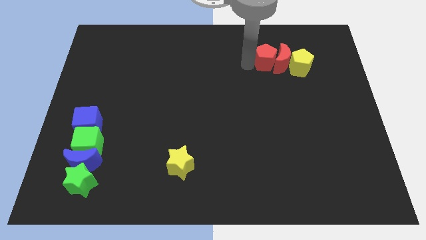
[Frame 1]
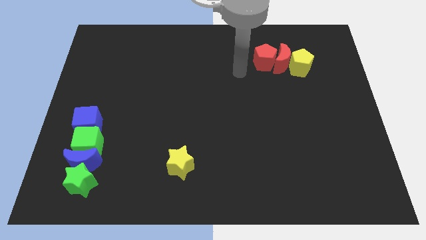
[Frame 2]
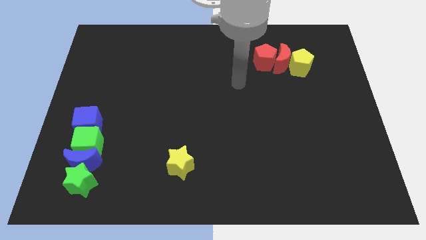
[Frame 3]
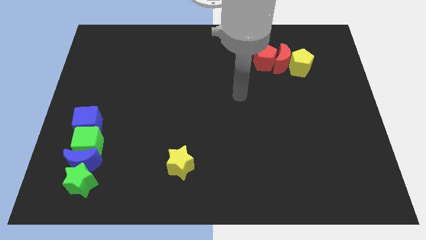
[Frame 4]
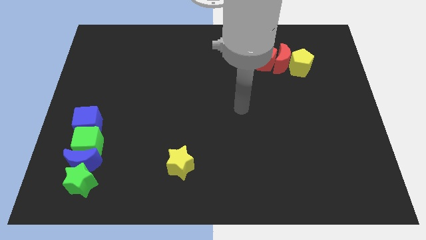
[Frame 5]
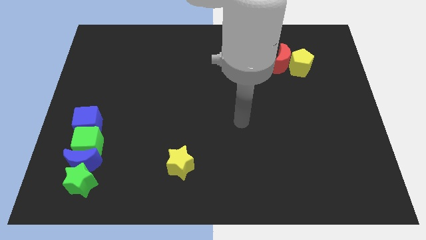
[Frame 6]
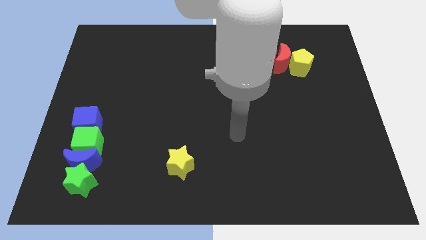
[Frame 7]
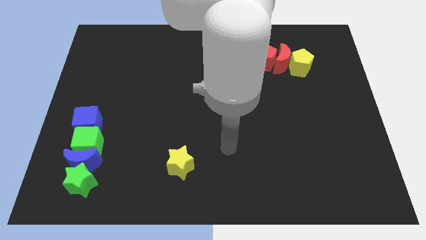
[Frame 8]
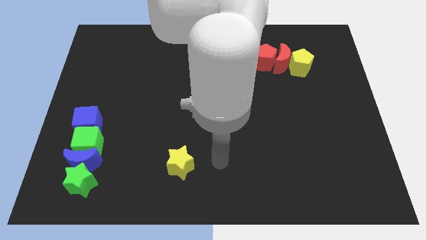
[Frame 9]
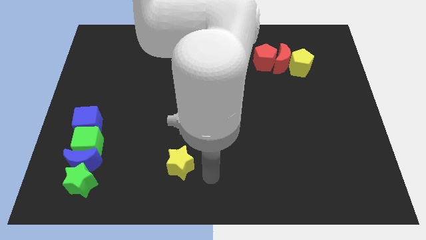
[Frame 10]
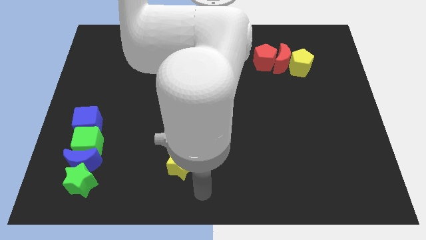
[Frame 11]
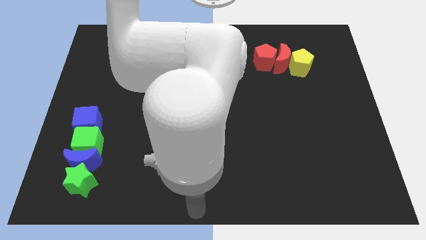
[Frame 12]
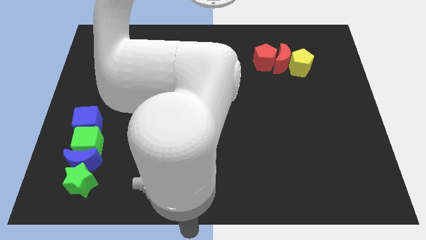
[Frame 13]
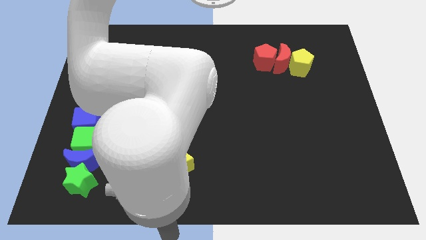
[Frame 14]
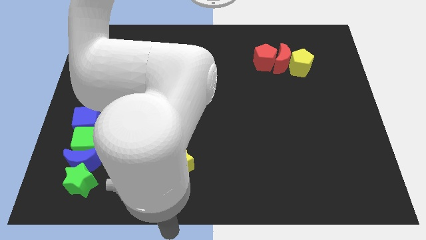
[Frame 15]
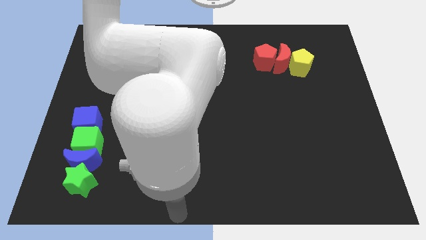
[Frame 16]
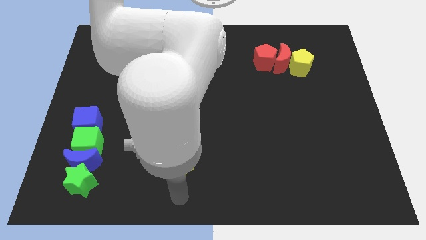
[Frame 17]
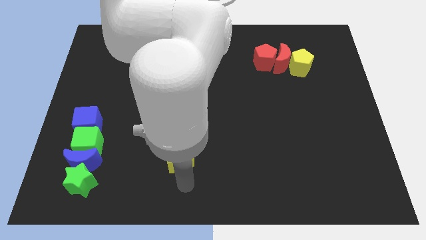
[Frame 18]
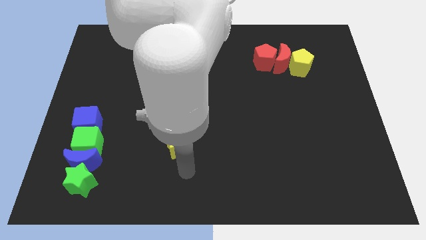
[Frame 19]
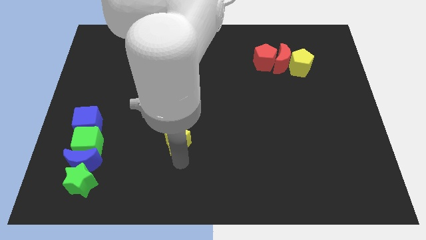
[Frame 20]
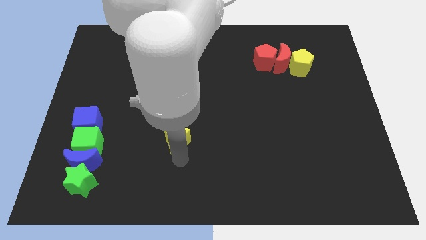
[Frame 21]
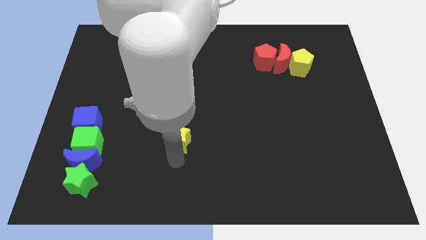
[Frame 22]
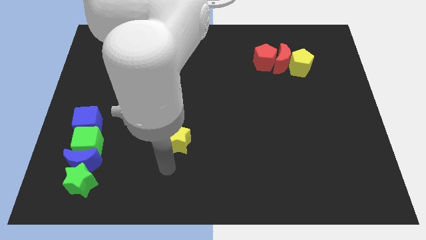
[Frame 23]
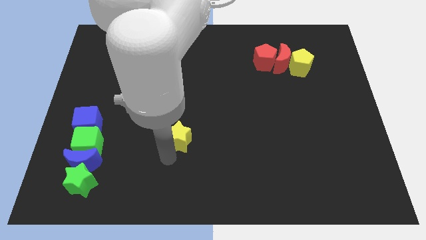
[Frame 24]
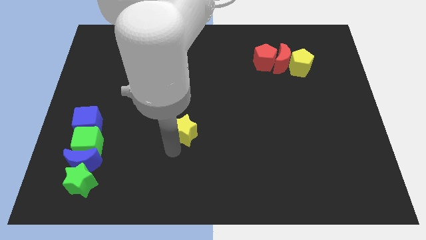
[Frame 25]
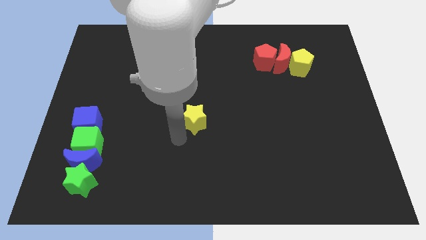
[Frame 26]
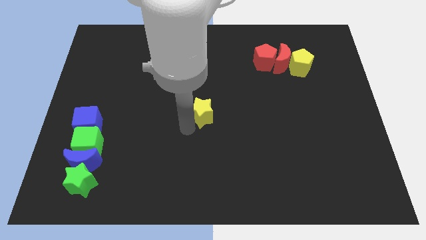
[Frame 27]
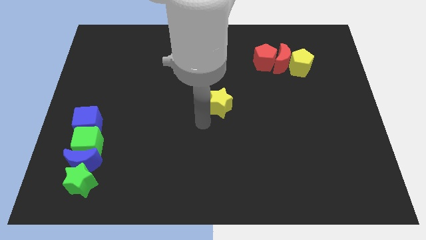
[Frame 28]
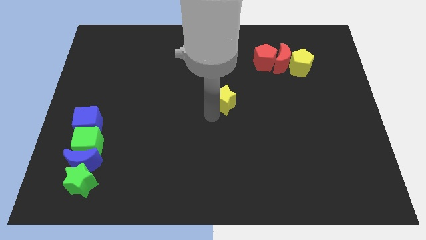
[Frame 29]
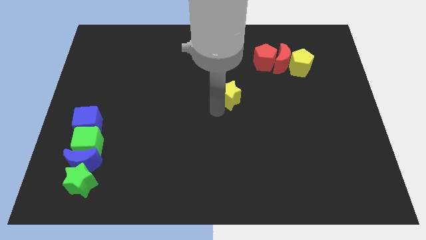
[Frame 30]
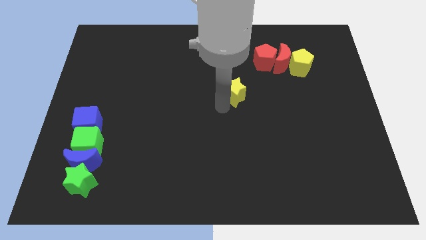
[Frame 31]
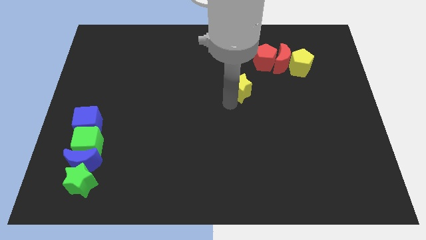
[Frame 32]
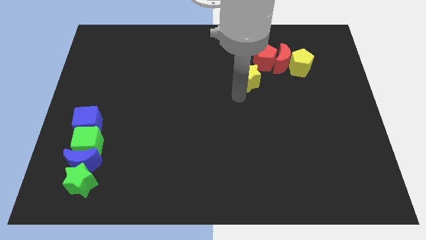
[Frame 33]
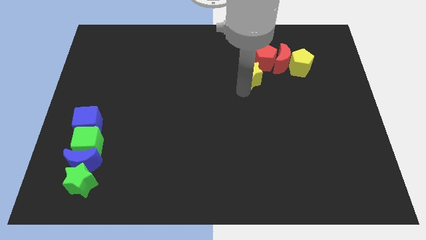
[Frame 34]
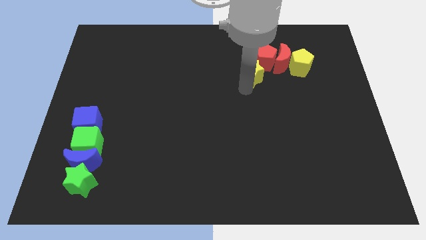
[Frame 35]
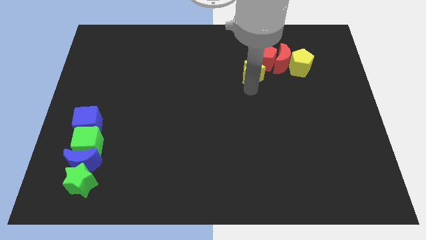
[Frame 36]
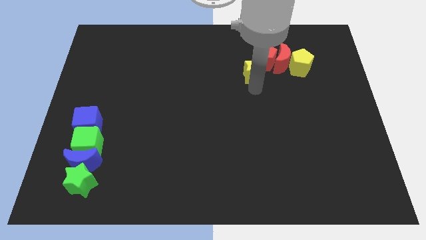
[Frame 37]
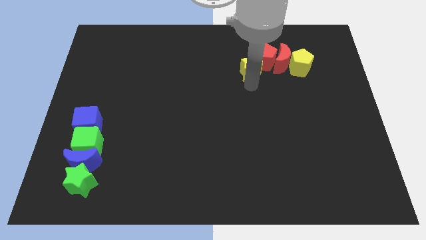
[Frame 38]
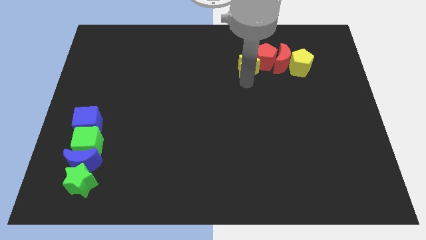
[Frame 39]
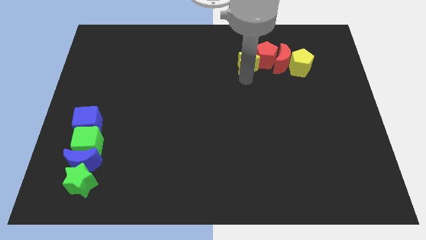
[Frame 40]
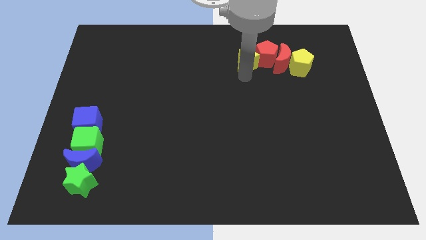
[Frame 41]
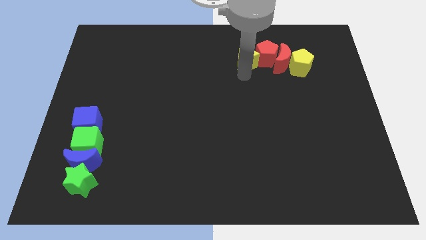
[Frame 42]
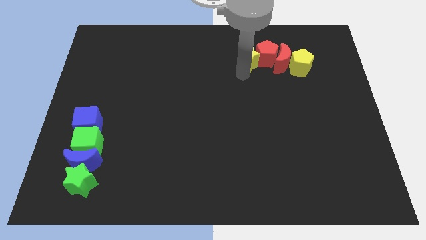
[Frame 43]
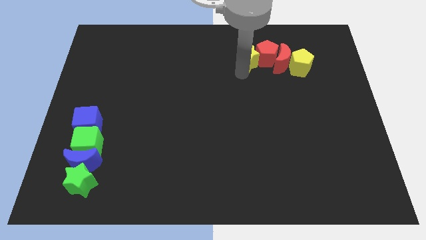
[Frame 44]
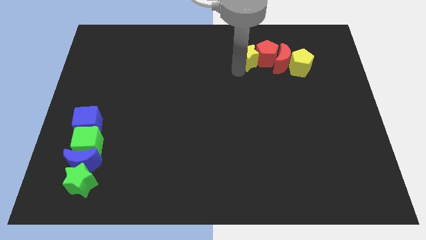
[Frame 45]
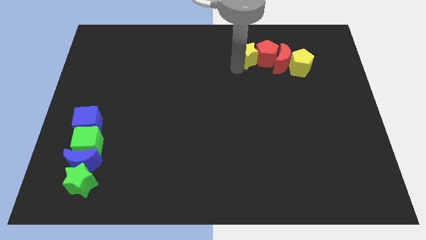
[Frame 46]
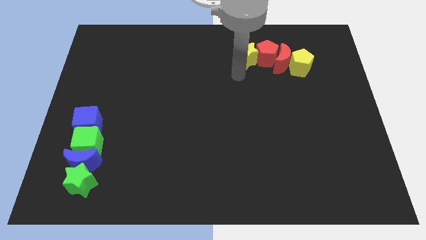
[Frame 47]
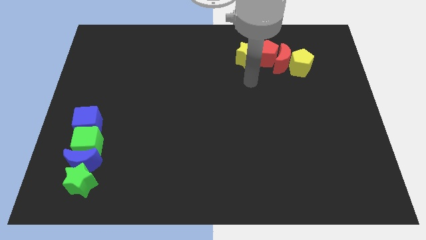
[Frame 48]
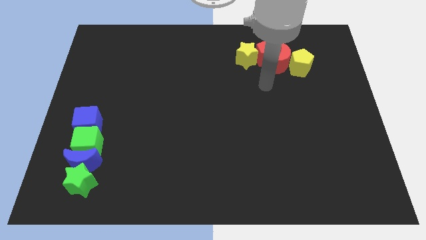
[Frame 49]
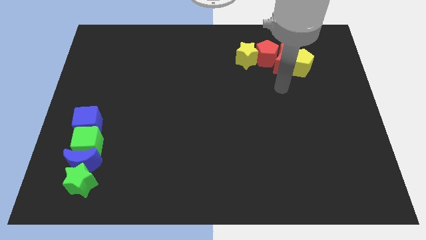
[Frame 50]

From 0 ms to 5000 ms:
place the yellow star left to the red pentagon

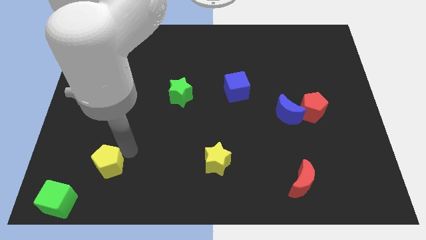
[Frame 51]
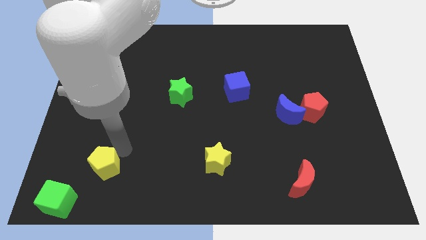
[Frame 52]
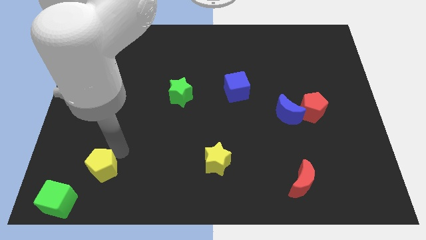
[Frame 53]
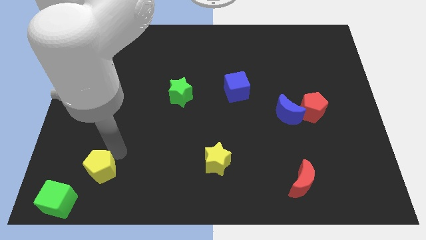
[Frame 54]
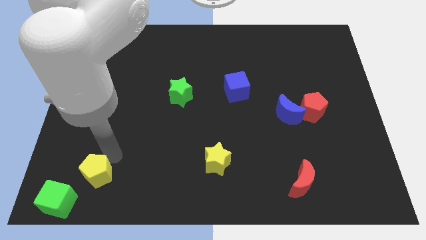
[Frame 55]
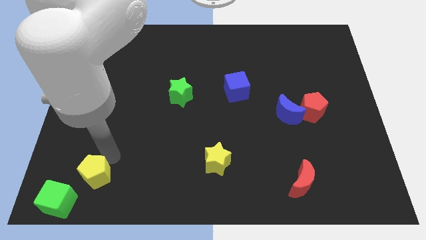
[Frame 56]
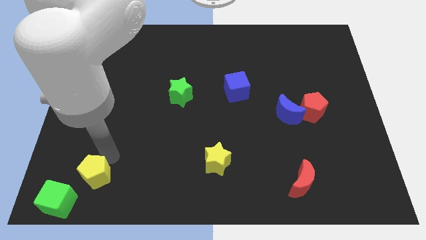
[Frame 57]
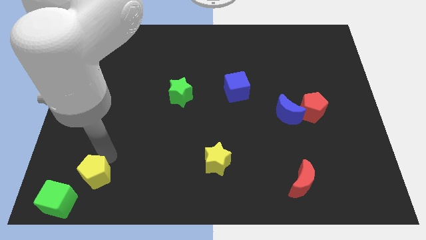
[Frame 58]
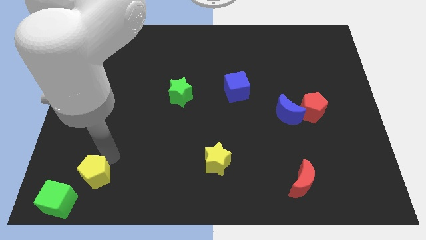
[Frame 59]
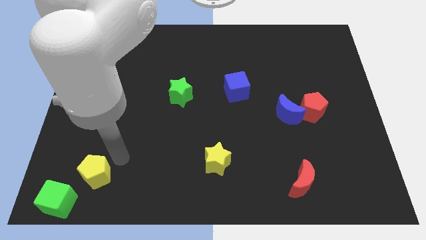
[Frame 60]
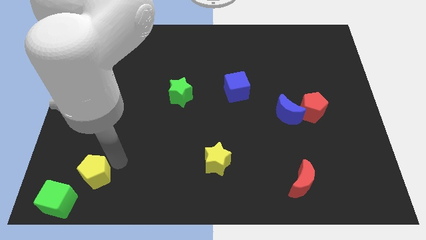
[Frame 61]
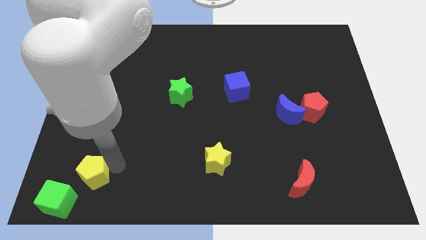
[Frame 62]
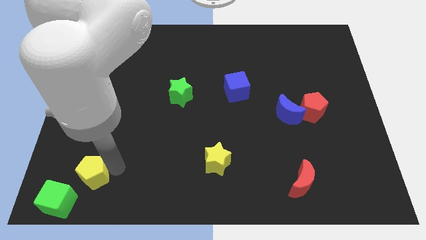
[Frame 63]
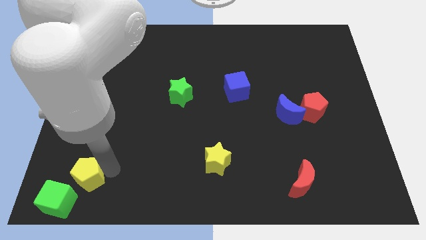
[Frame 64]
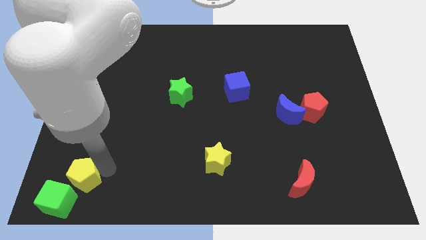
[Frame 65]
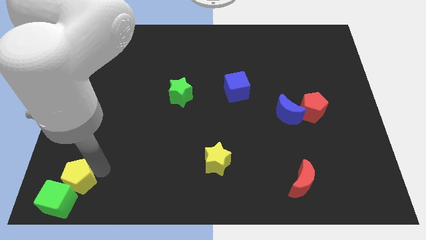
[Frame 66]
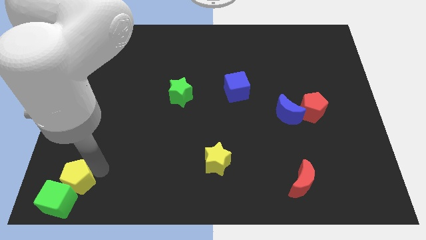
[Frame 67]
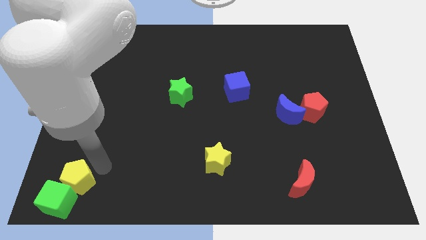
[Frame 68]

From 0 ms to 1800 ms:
place the yellow pentagon above the green cube

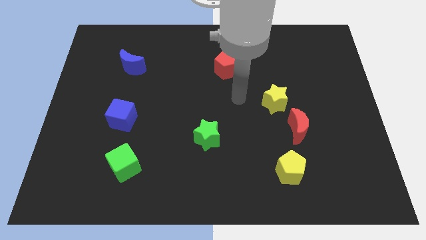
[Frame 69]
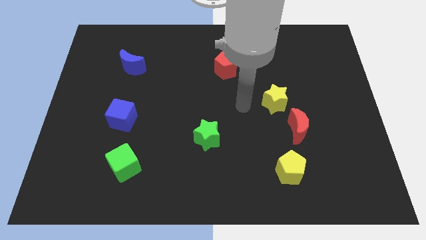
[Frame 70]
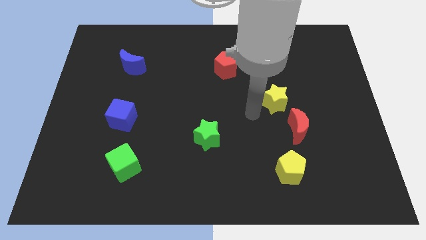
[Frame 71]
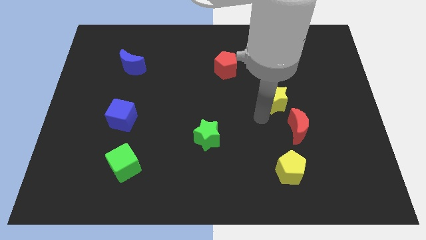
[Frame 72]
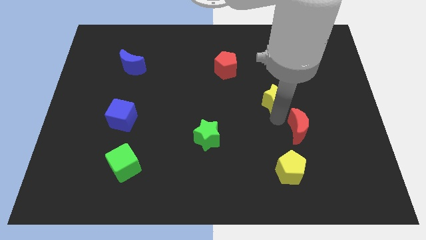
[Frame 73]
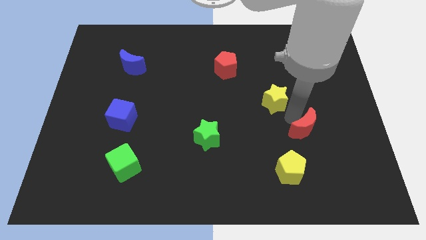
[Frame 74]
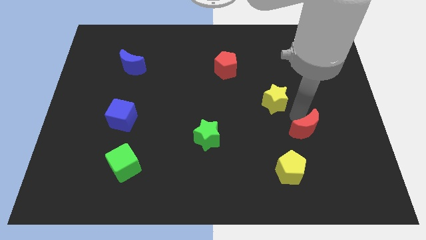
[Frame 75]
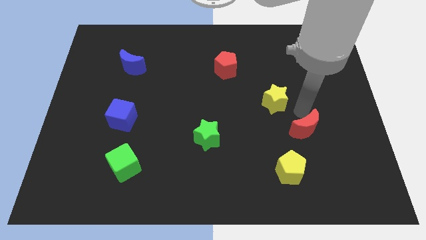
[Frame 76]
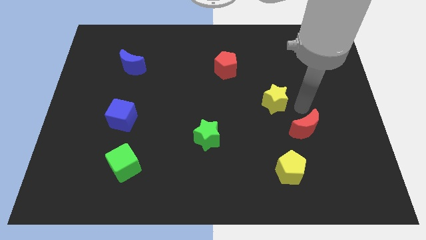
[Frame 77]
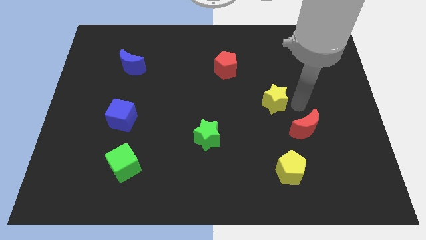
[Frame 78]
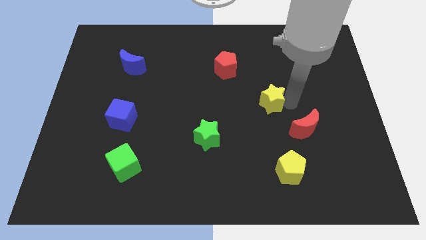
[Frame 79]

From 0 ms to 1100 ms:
move the red moon slightly to the right

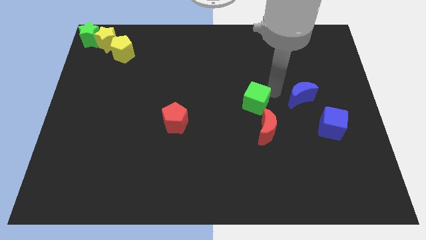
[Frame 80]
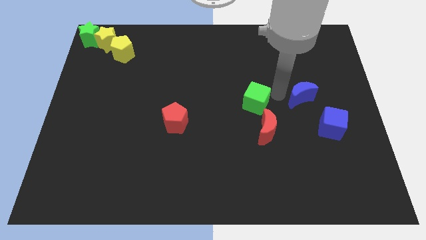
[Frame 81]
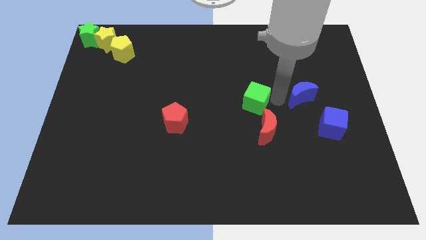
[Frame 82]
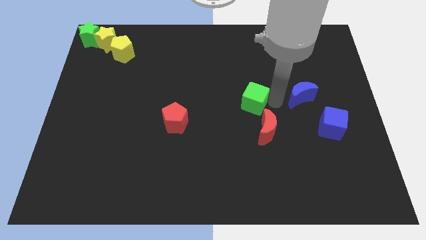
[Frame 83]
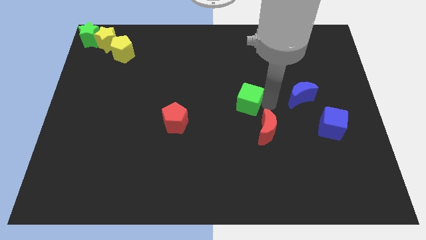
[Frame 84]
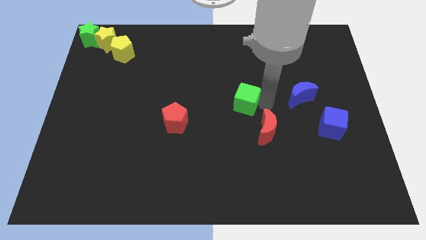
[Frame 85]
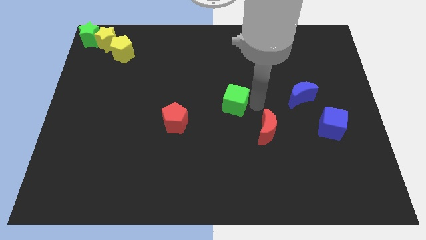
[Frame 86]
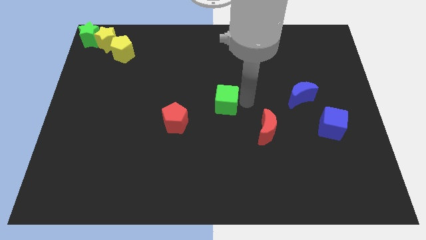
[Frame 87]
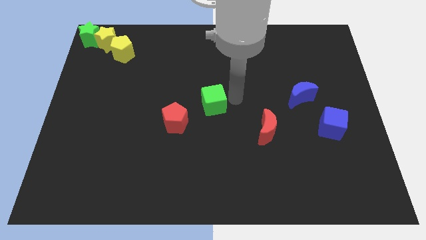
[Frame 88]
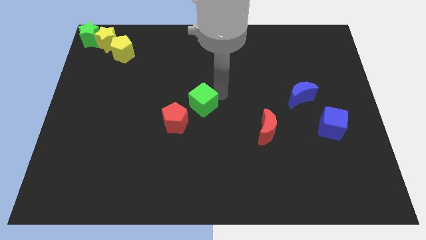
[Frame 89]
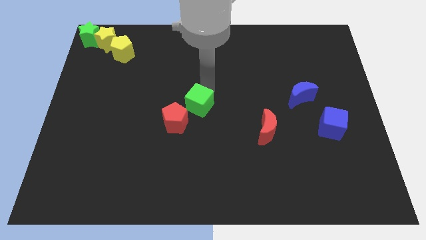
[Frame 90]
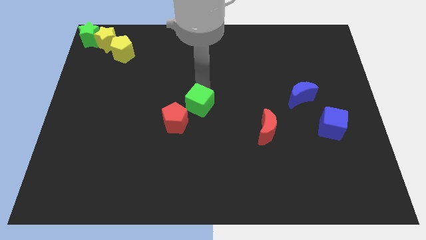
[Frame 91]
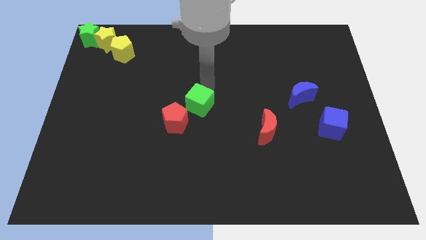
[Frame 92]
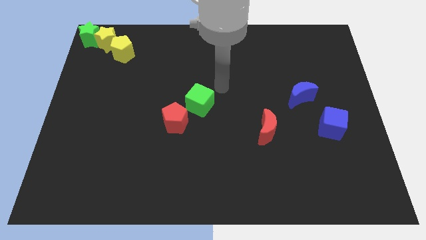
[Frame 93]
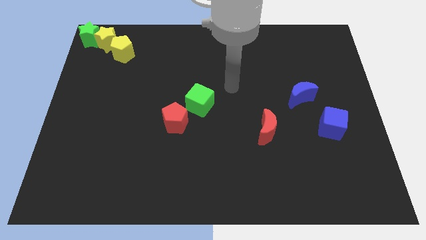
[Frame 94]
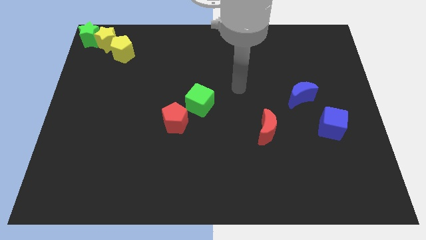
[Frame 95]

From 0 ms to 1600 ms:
push the green cube close to the red pentagon
